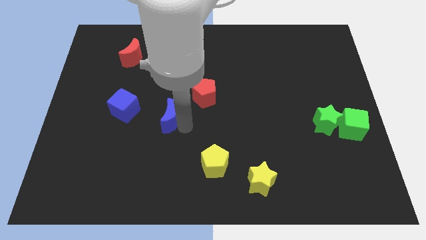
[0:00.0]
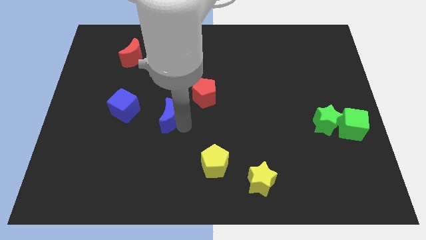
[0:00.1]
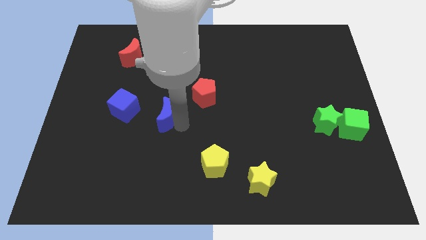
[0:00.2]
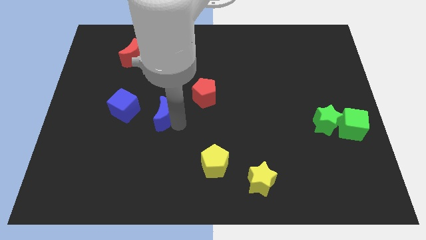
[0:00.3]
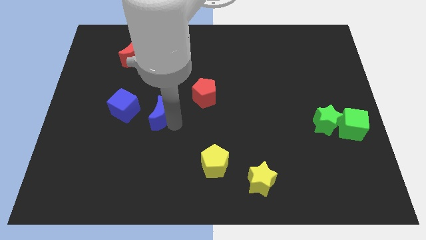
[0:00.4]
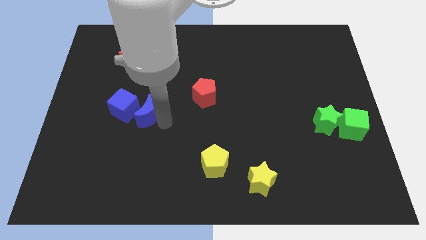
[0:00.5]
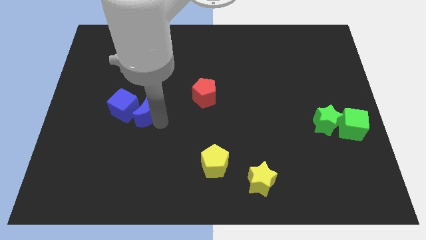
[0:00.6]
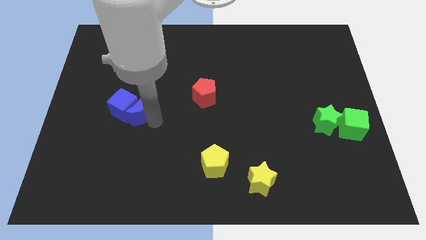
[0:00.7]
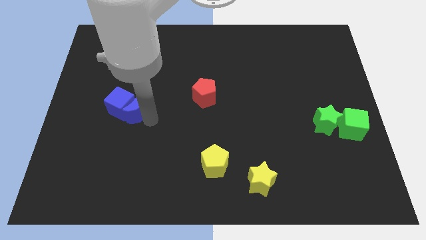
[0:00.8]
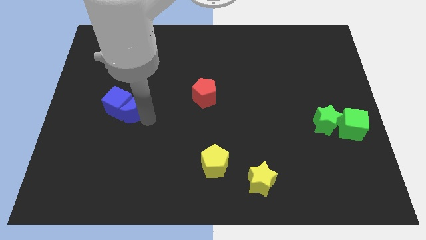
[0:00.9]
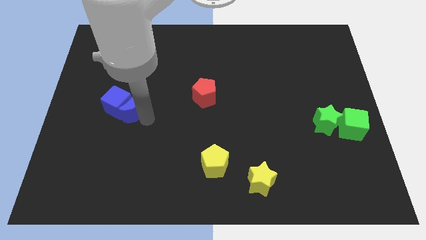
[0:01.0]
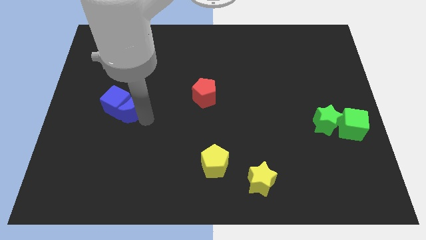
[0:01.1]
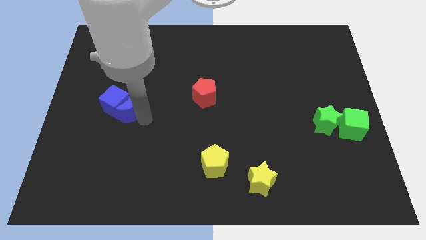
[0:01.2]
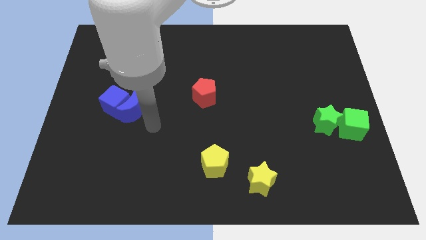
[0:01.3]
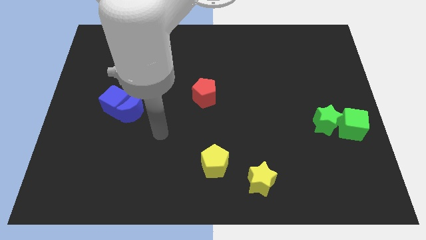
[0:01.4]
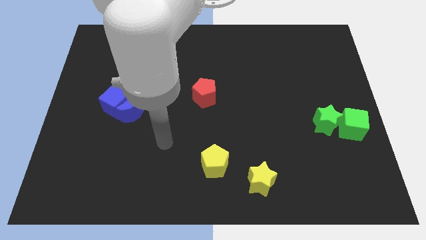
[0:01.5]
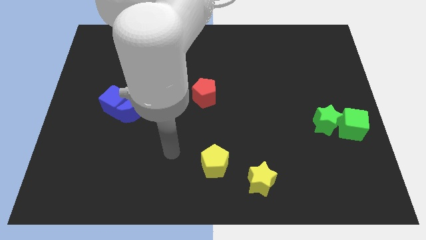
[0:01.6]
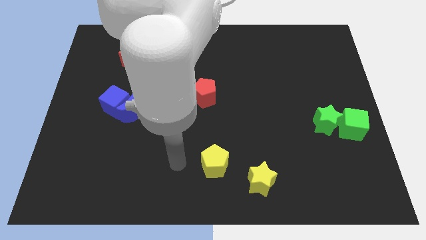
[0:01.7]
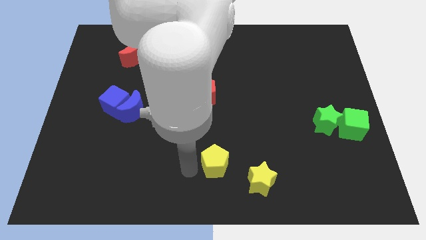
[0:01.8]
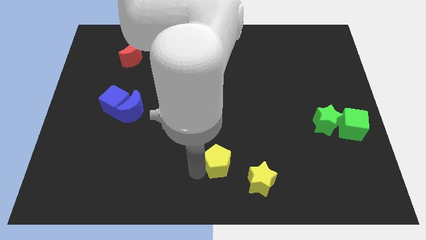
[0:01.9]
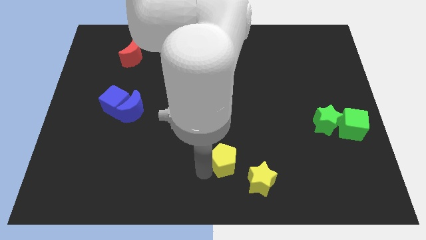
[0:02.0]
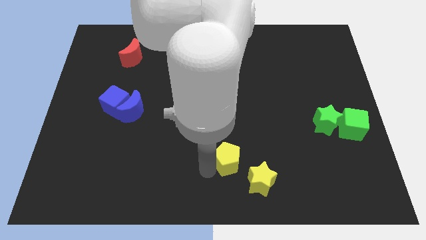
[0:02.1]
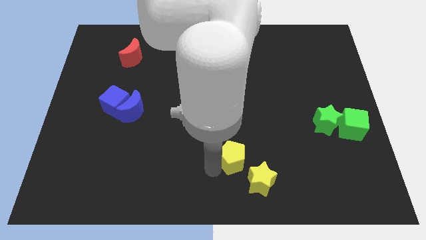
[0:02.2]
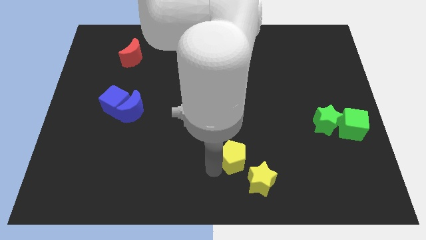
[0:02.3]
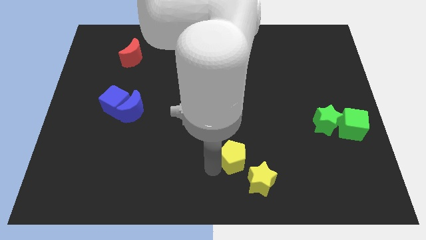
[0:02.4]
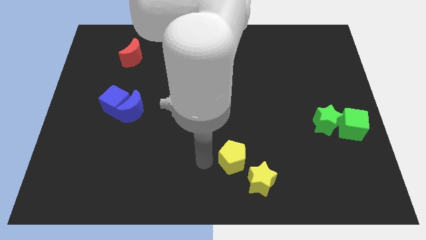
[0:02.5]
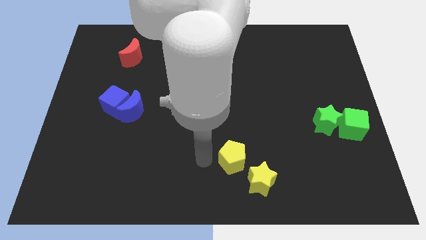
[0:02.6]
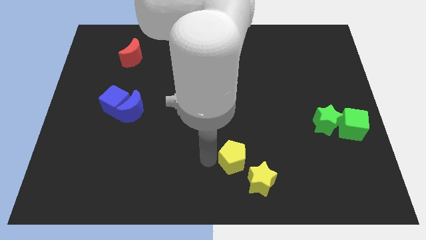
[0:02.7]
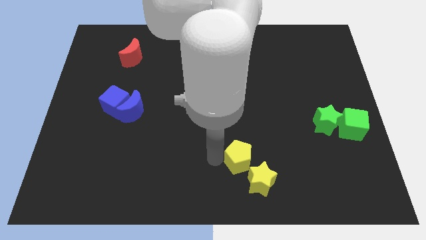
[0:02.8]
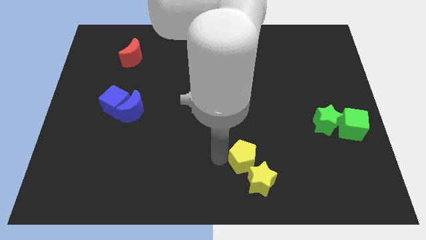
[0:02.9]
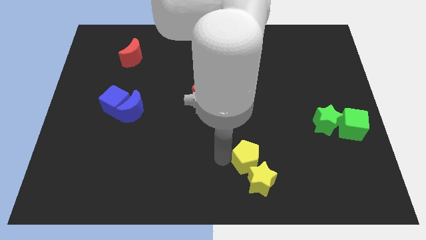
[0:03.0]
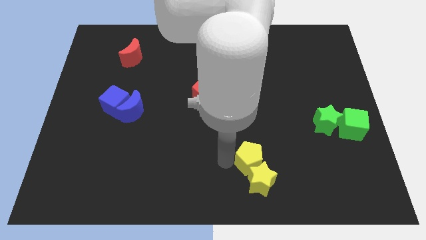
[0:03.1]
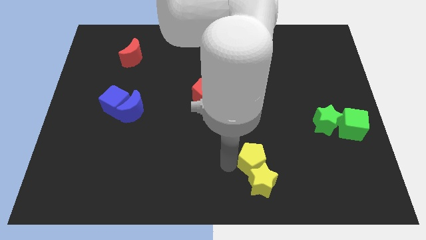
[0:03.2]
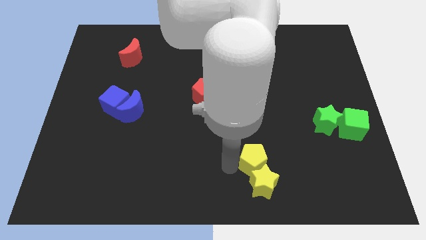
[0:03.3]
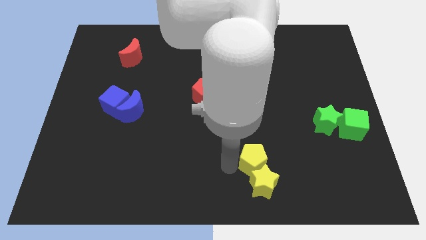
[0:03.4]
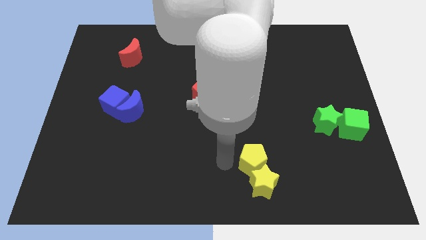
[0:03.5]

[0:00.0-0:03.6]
push the blue semicircle into the blue cube

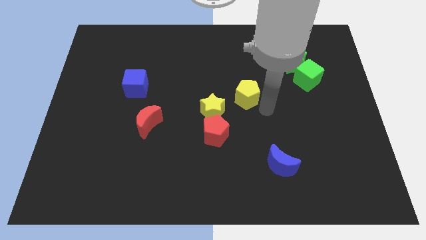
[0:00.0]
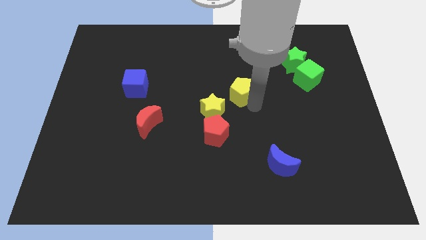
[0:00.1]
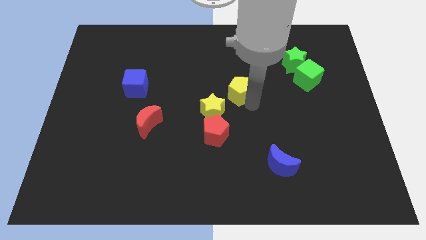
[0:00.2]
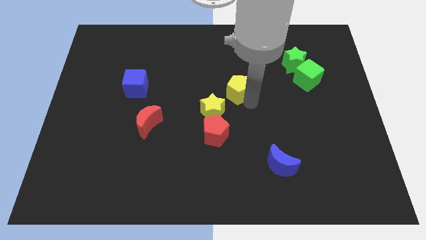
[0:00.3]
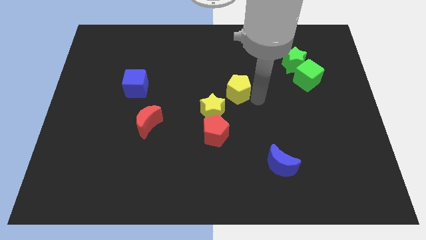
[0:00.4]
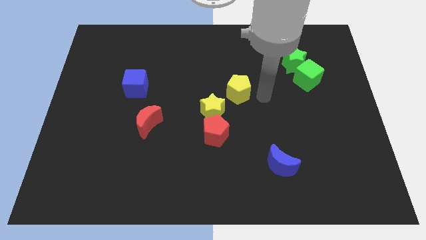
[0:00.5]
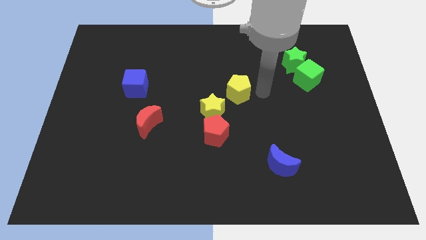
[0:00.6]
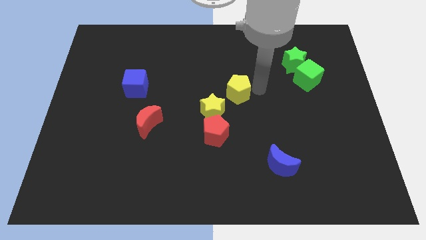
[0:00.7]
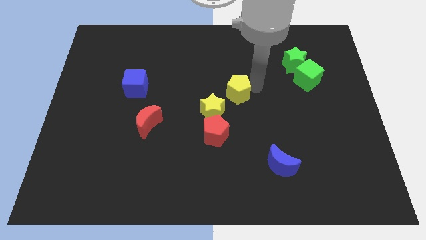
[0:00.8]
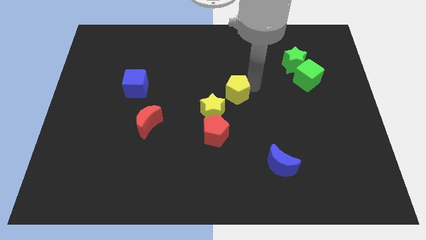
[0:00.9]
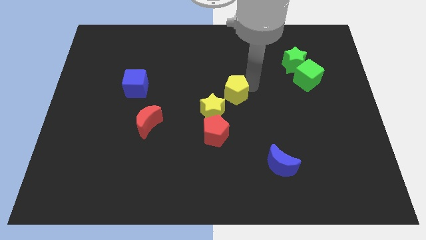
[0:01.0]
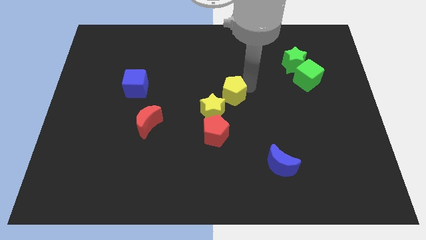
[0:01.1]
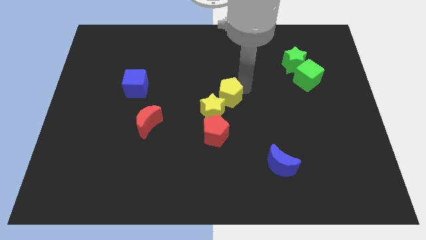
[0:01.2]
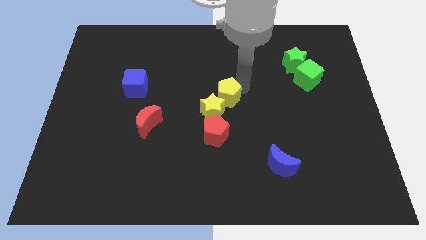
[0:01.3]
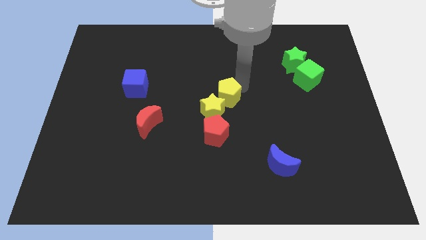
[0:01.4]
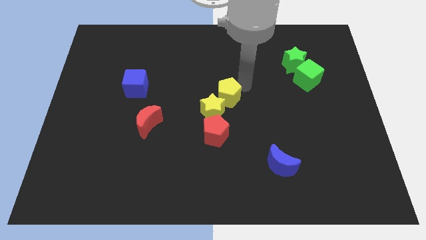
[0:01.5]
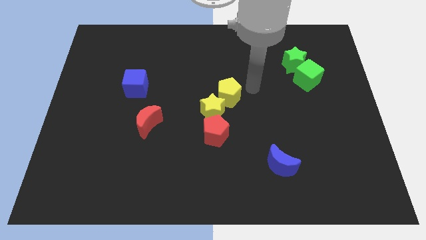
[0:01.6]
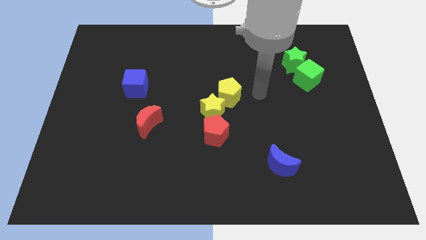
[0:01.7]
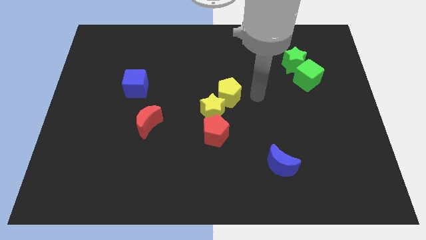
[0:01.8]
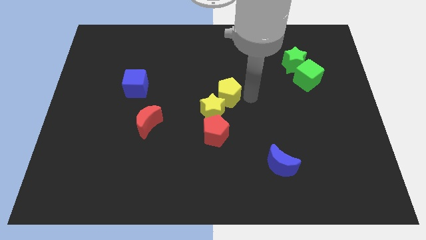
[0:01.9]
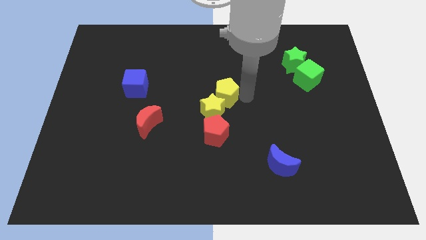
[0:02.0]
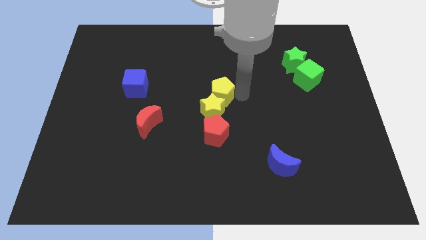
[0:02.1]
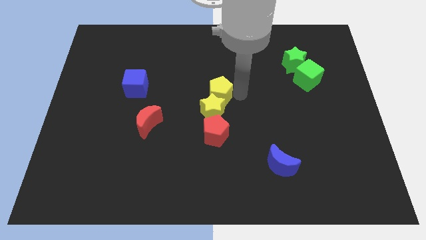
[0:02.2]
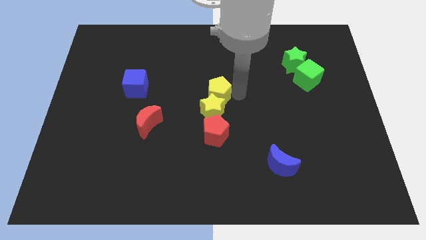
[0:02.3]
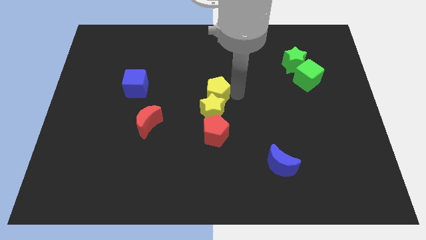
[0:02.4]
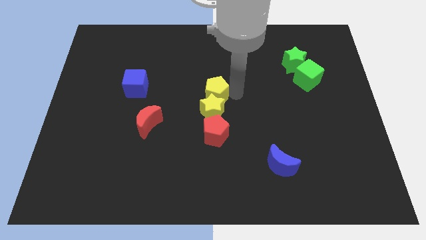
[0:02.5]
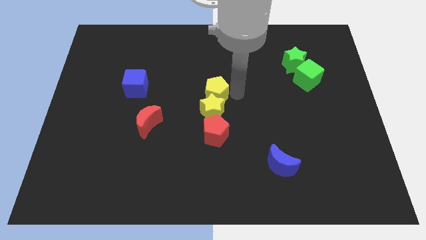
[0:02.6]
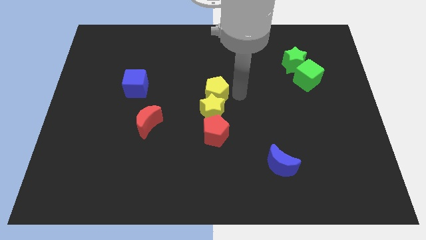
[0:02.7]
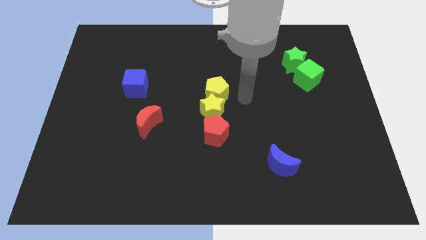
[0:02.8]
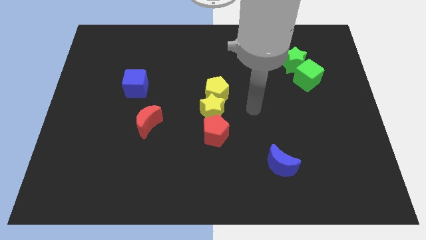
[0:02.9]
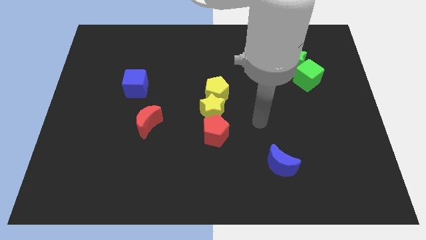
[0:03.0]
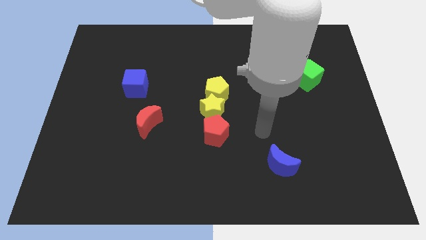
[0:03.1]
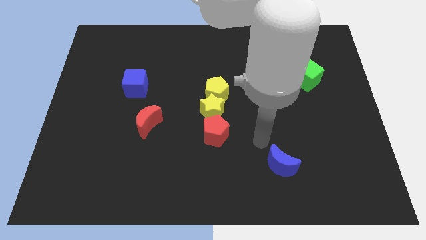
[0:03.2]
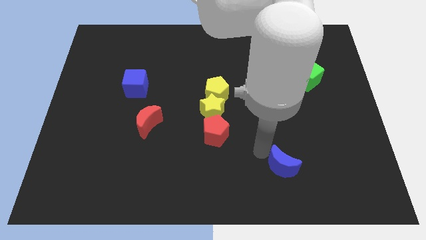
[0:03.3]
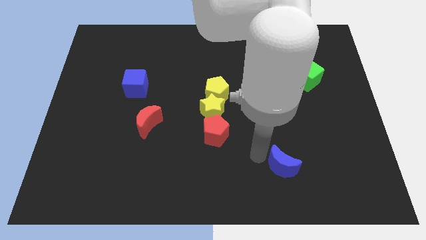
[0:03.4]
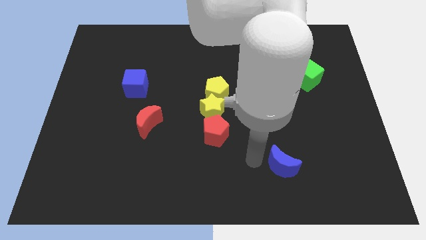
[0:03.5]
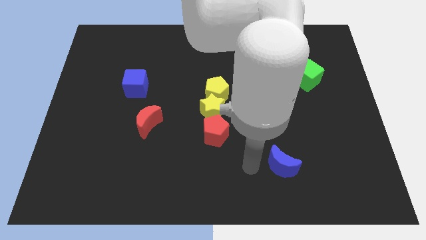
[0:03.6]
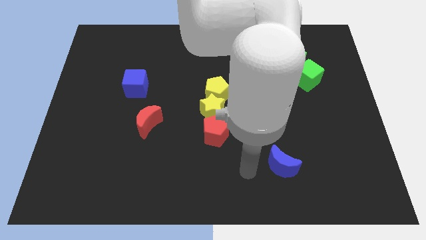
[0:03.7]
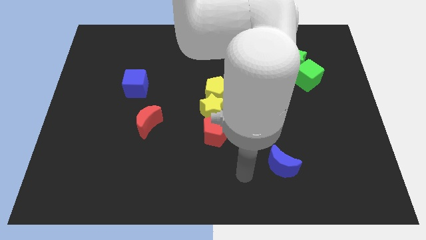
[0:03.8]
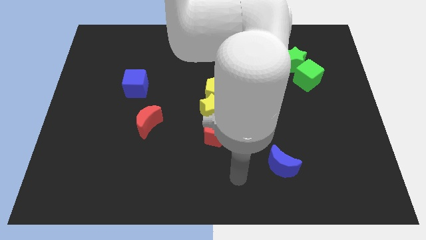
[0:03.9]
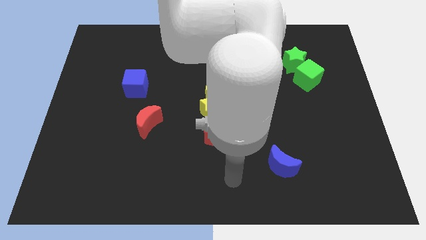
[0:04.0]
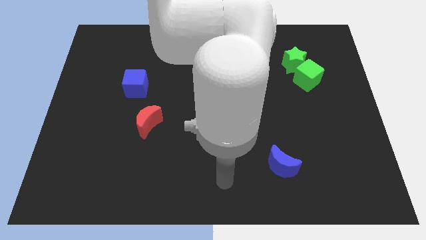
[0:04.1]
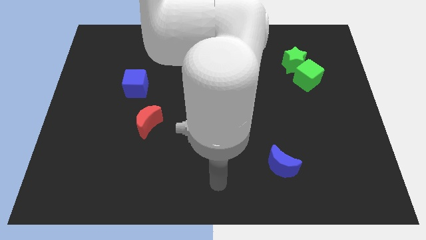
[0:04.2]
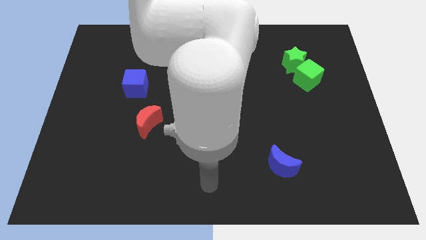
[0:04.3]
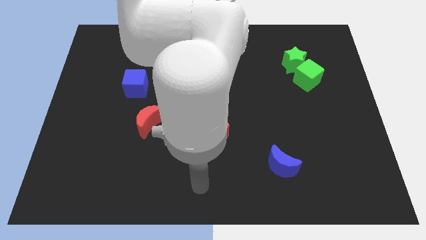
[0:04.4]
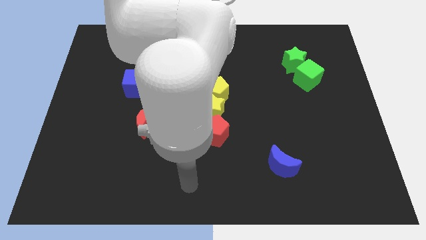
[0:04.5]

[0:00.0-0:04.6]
move the yellow pentagon towards the yellow star on the center of the board

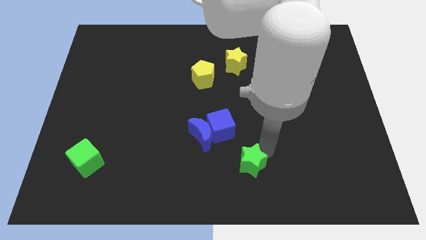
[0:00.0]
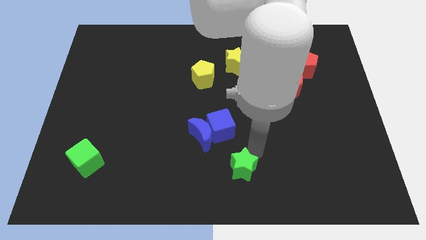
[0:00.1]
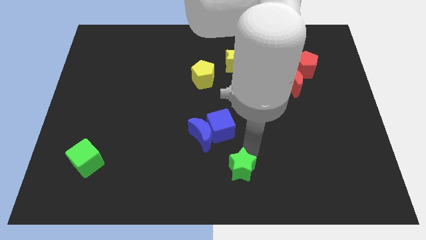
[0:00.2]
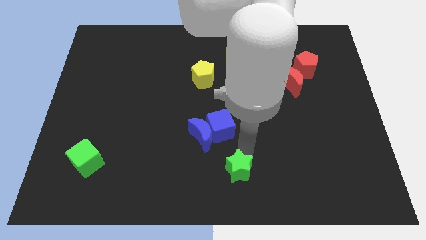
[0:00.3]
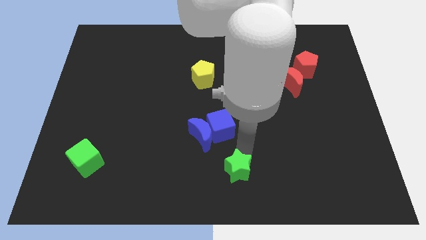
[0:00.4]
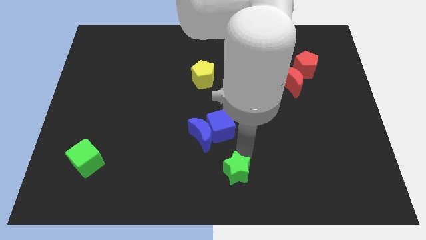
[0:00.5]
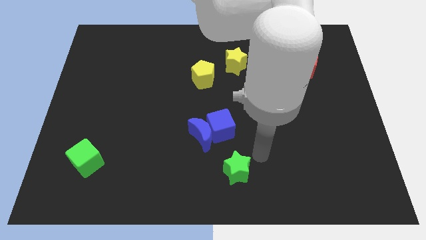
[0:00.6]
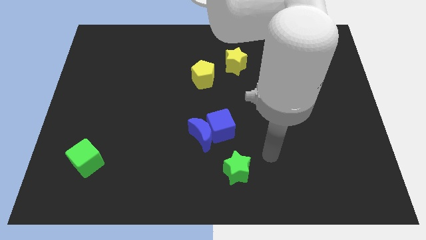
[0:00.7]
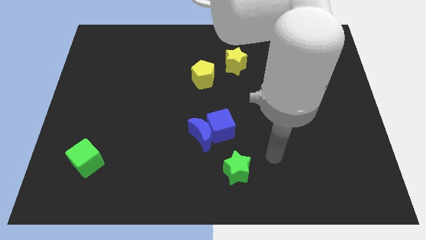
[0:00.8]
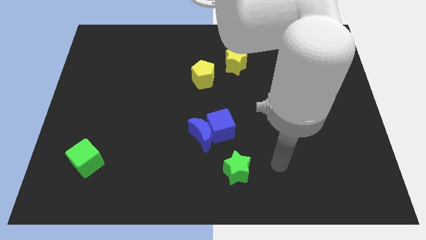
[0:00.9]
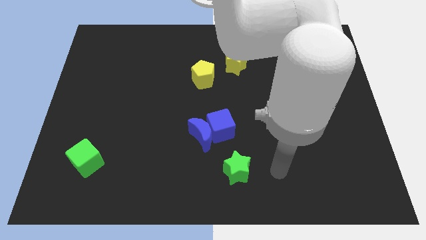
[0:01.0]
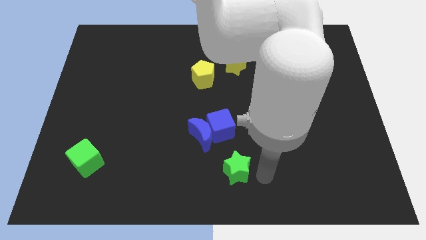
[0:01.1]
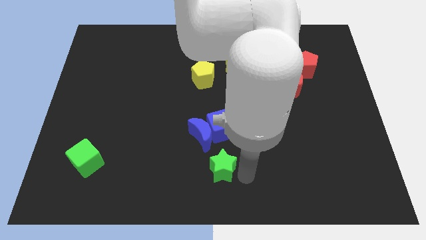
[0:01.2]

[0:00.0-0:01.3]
push the green star towards the bottom center of the board
